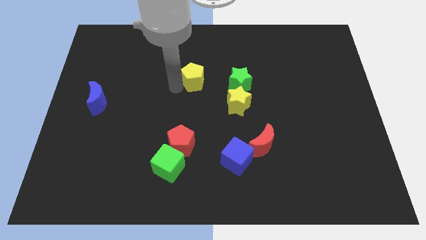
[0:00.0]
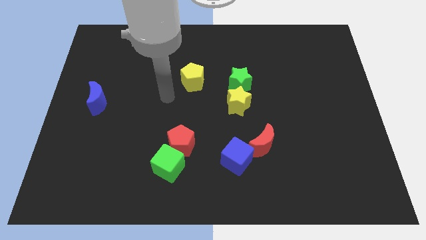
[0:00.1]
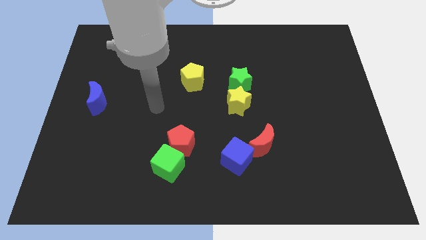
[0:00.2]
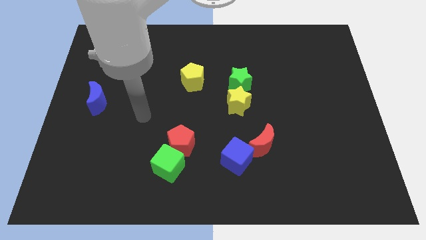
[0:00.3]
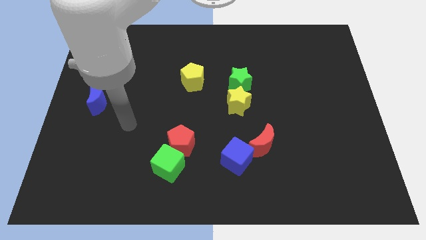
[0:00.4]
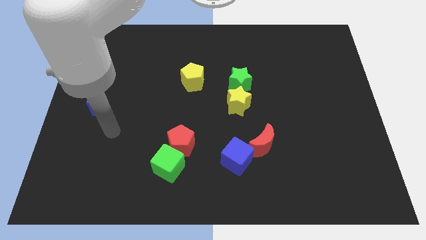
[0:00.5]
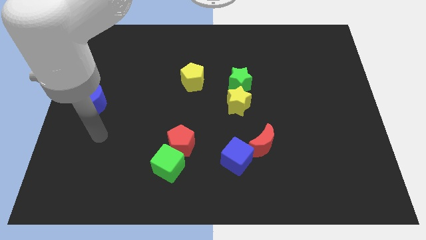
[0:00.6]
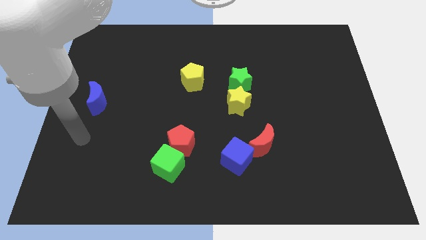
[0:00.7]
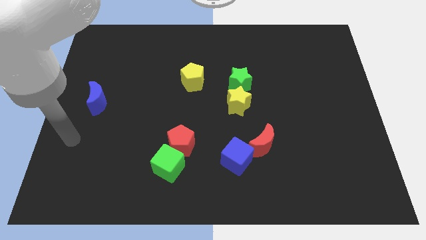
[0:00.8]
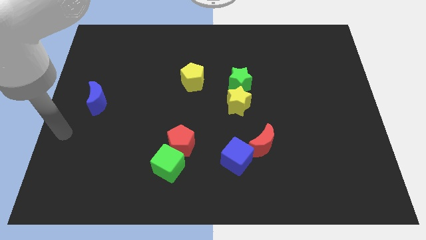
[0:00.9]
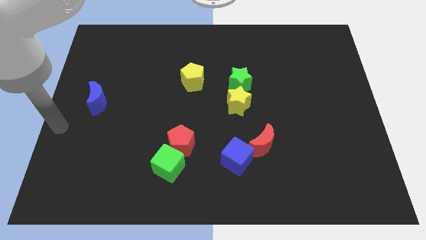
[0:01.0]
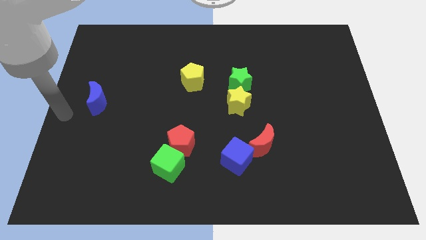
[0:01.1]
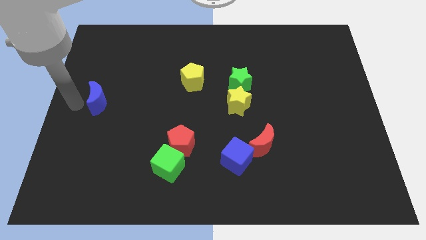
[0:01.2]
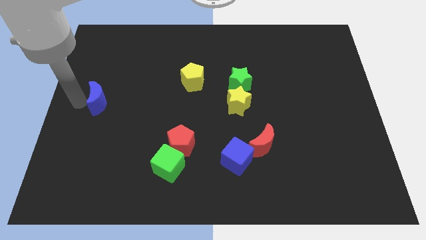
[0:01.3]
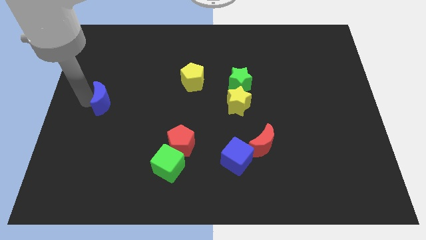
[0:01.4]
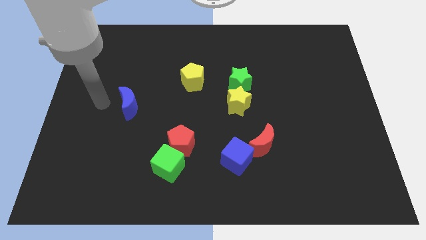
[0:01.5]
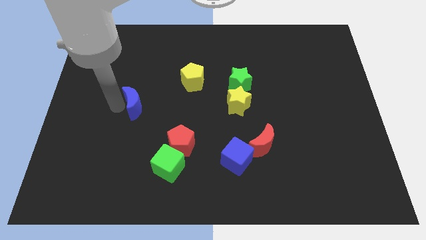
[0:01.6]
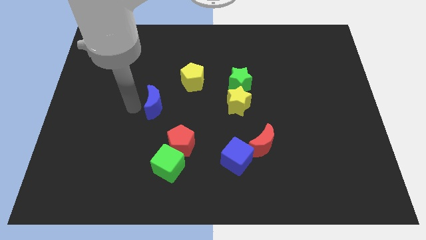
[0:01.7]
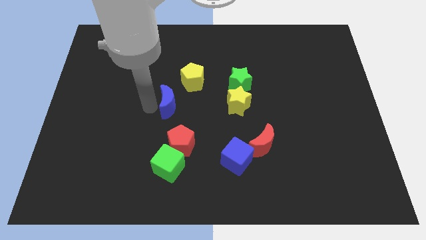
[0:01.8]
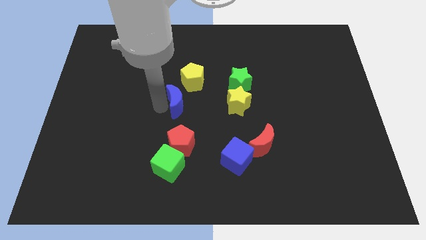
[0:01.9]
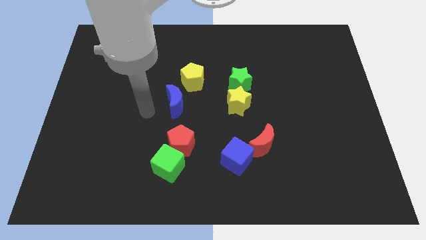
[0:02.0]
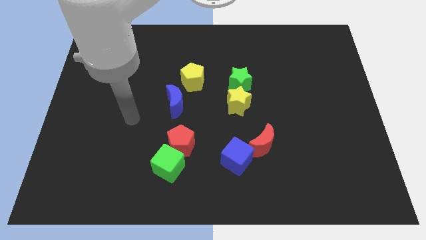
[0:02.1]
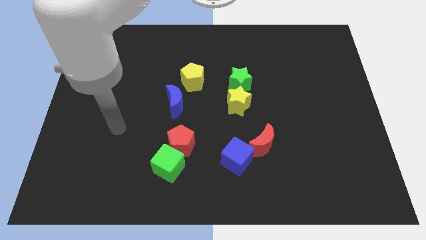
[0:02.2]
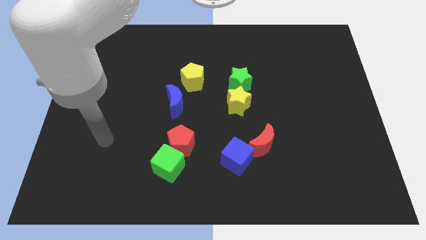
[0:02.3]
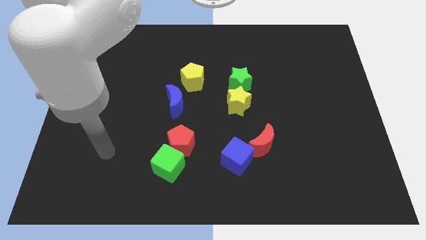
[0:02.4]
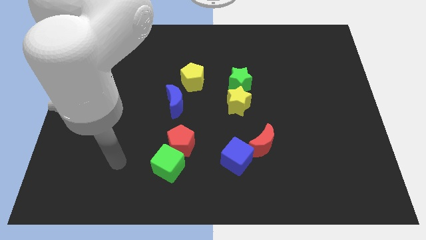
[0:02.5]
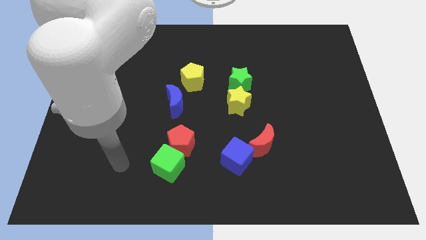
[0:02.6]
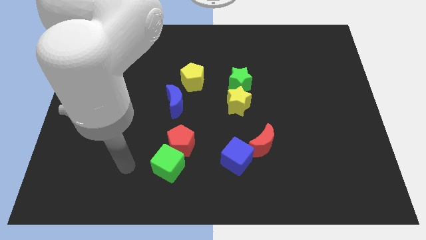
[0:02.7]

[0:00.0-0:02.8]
slide the blue crescent towards the bottom side of the yellow pentagon

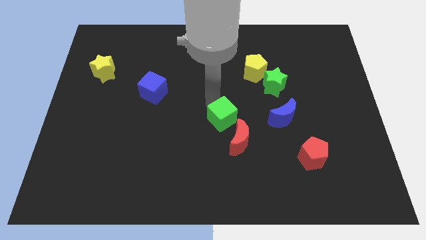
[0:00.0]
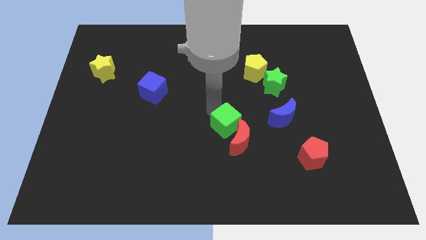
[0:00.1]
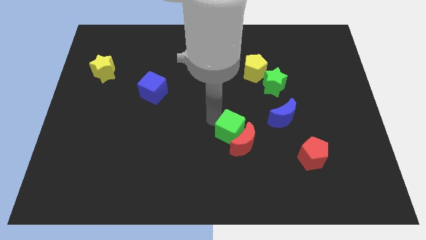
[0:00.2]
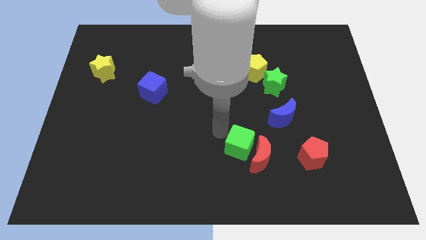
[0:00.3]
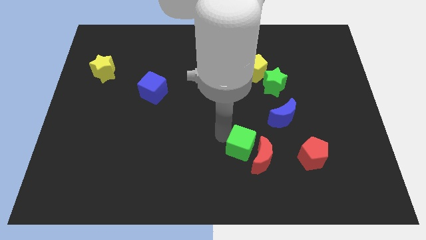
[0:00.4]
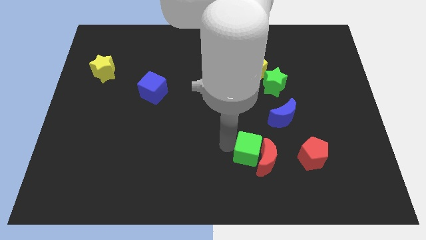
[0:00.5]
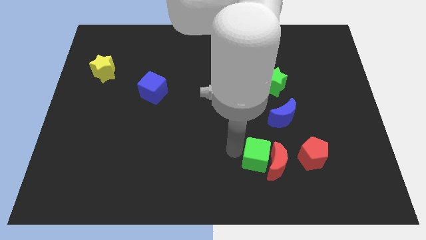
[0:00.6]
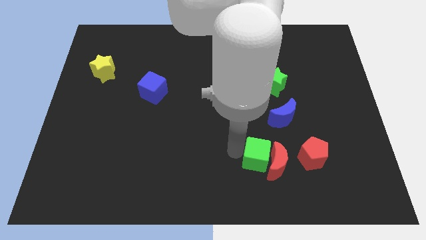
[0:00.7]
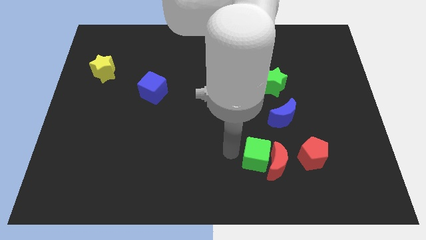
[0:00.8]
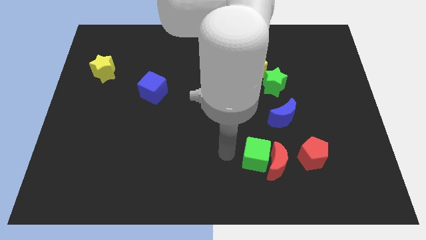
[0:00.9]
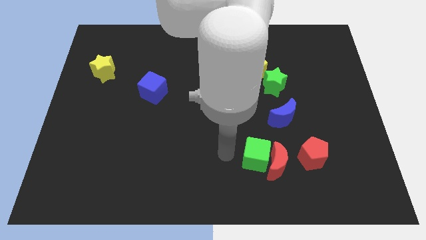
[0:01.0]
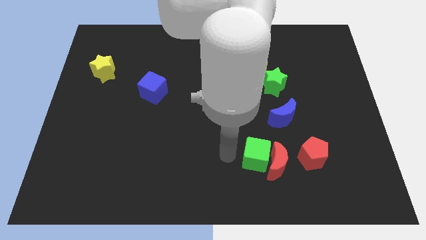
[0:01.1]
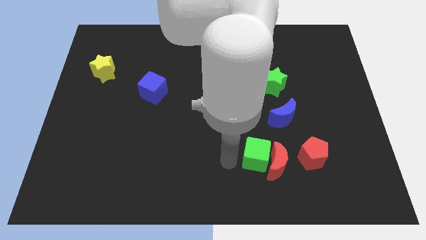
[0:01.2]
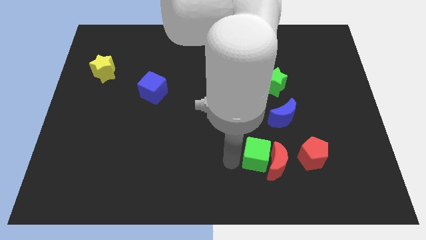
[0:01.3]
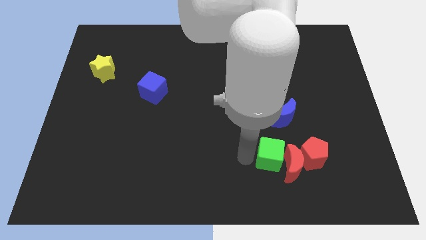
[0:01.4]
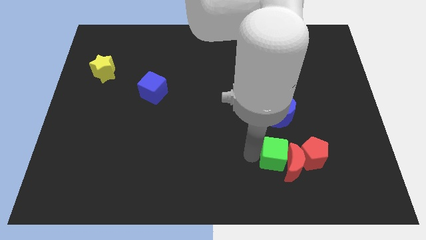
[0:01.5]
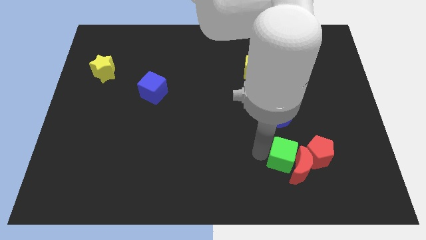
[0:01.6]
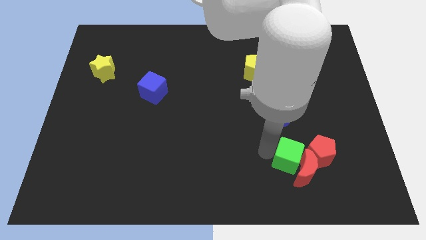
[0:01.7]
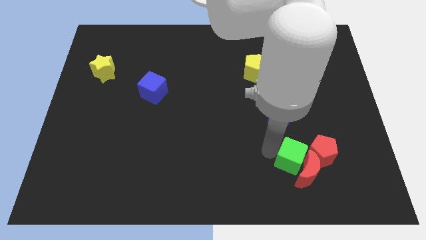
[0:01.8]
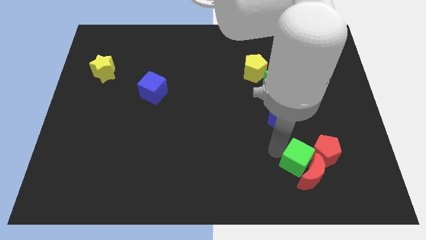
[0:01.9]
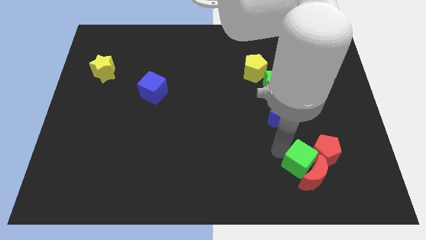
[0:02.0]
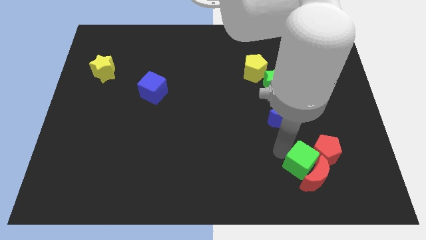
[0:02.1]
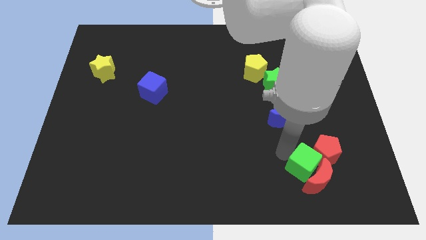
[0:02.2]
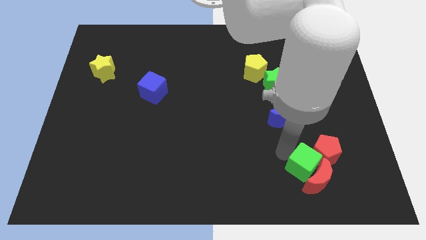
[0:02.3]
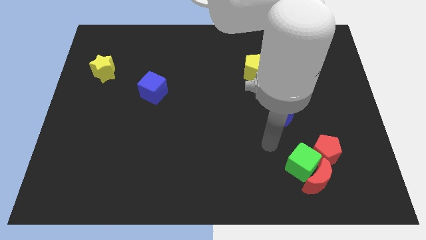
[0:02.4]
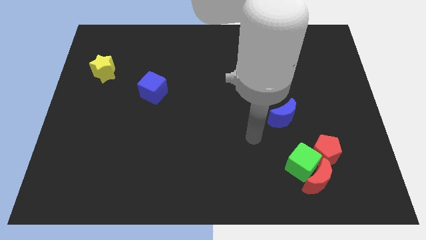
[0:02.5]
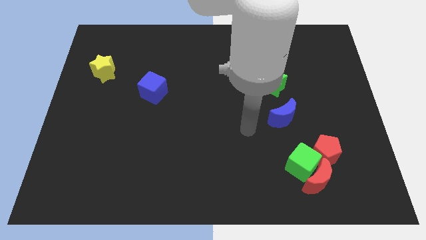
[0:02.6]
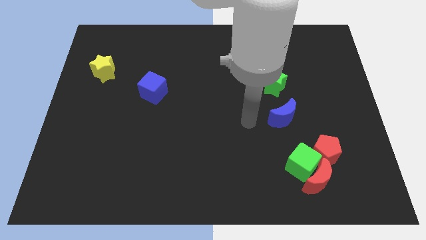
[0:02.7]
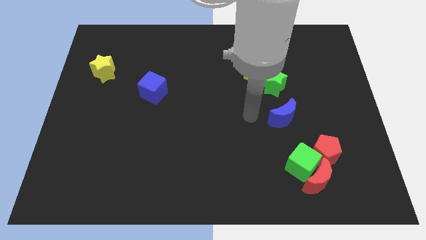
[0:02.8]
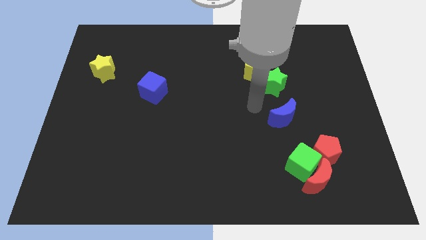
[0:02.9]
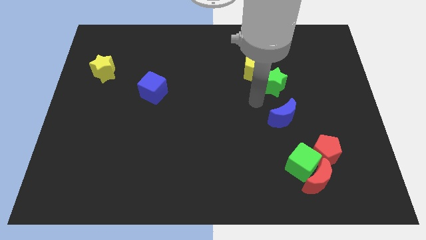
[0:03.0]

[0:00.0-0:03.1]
push the green cube and red crescent into the red pentagon and go away

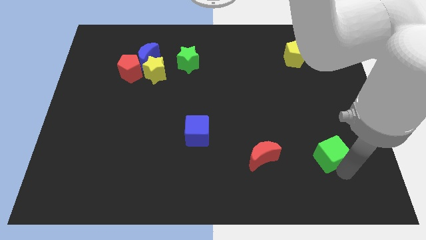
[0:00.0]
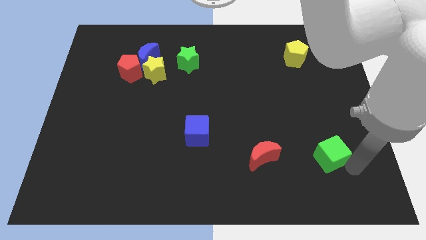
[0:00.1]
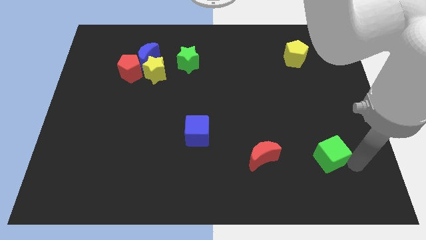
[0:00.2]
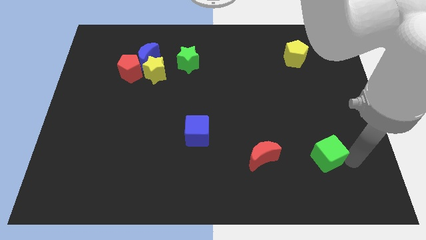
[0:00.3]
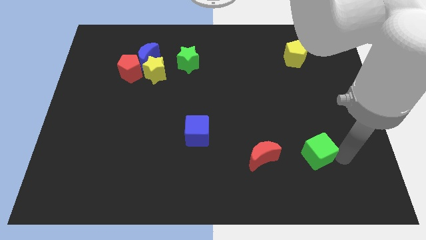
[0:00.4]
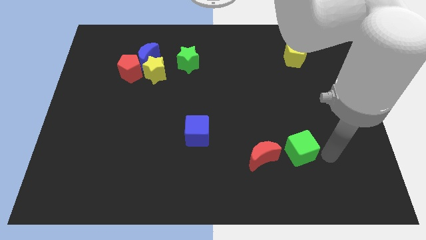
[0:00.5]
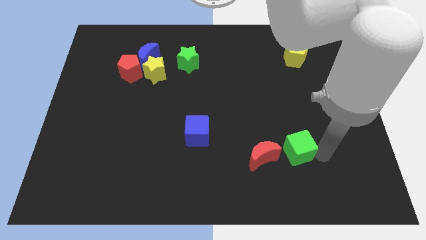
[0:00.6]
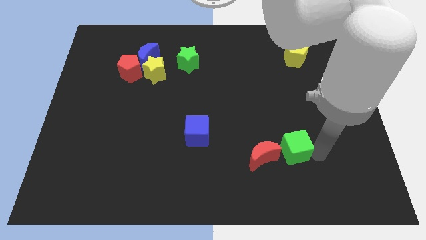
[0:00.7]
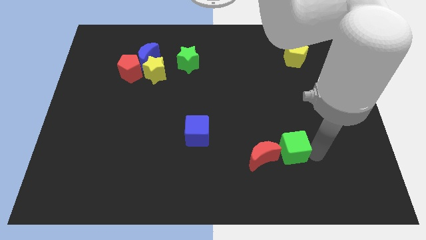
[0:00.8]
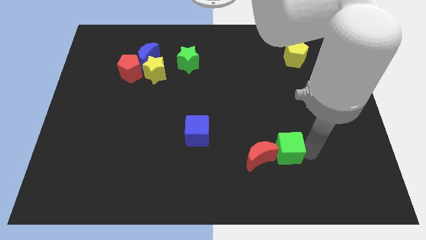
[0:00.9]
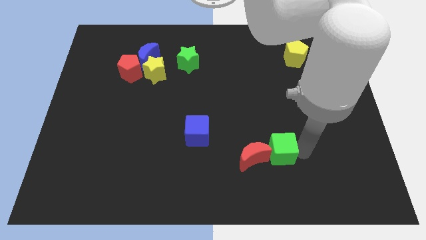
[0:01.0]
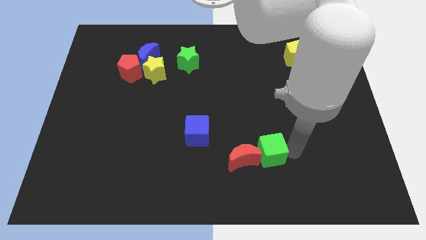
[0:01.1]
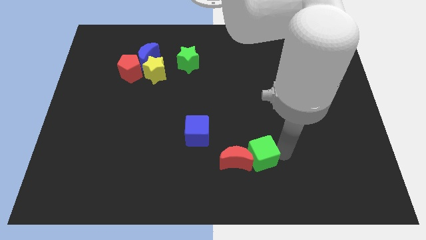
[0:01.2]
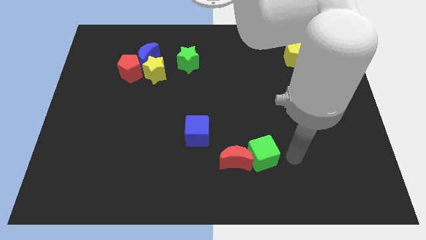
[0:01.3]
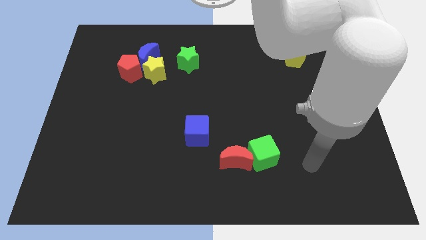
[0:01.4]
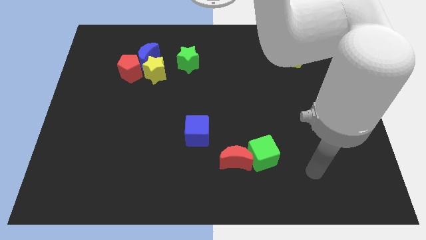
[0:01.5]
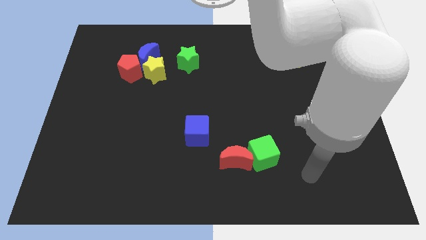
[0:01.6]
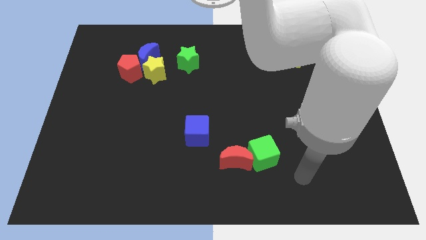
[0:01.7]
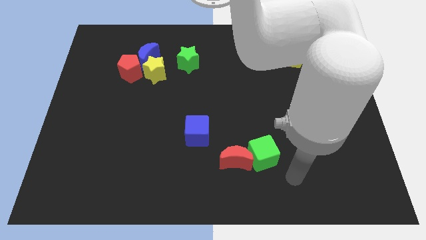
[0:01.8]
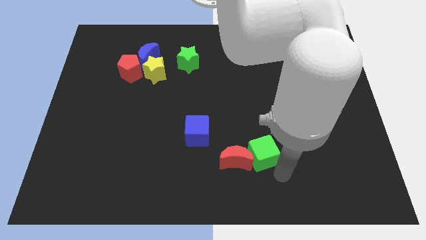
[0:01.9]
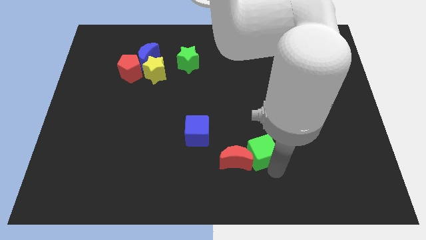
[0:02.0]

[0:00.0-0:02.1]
slide the green cube into the red moon

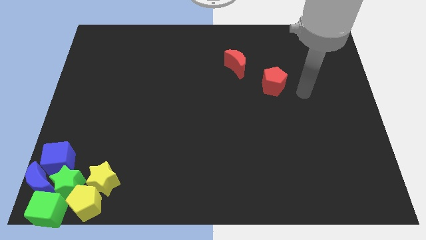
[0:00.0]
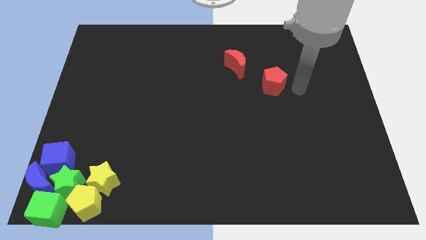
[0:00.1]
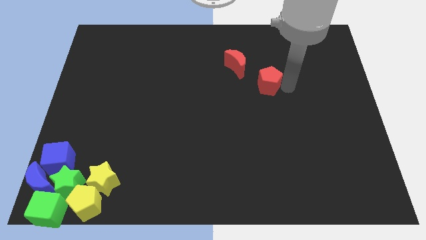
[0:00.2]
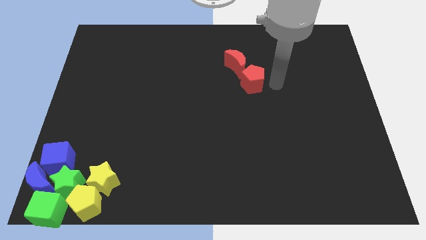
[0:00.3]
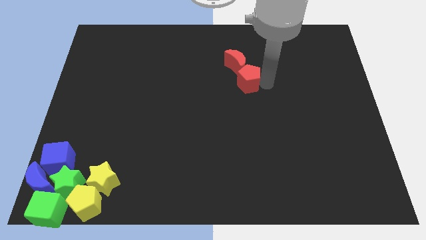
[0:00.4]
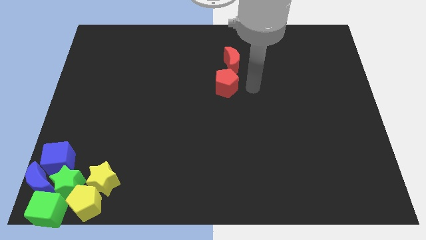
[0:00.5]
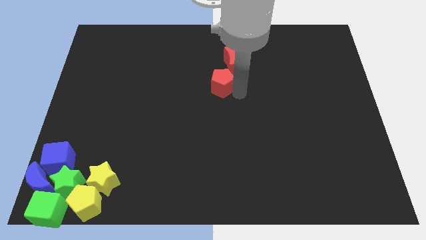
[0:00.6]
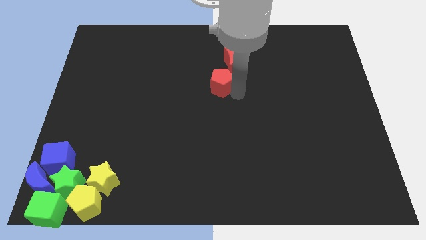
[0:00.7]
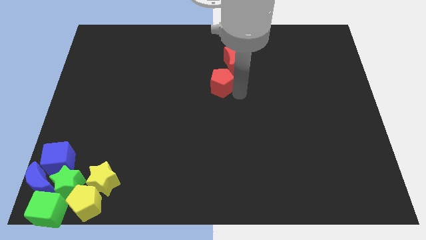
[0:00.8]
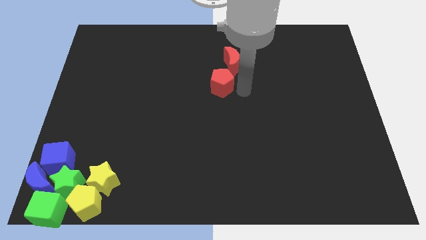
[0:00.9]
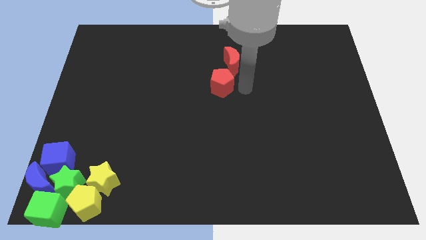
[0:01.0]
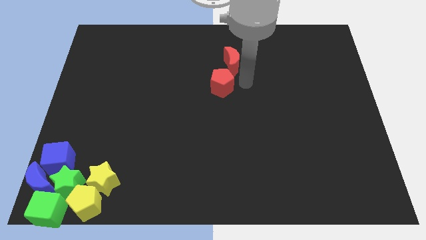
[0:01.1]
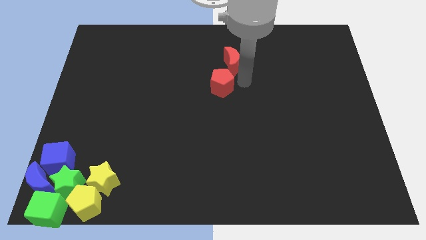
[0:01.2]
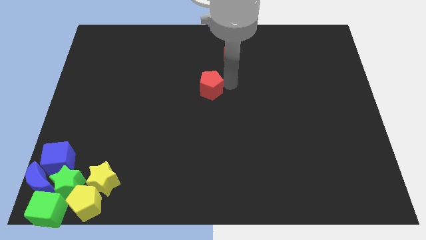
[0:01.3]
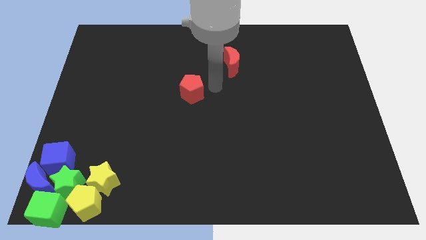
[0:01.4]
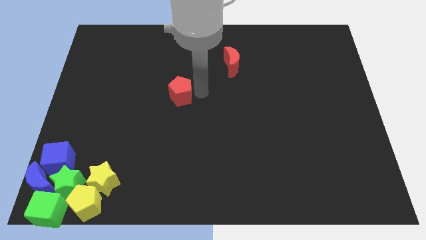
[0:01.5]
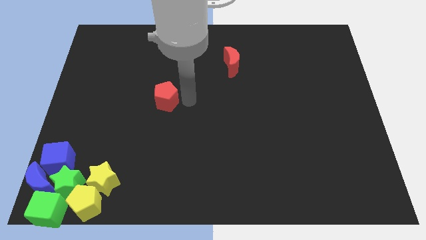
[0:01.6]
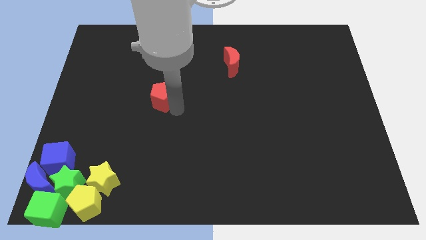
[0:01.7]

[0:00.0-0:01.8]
slide the red pentagon diagonally on the bottom left side of the red crescent
